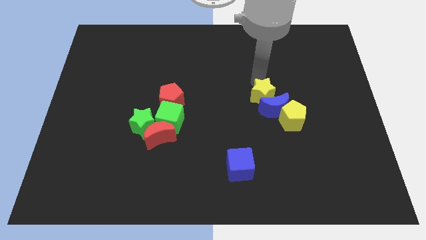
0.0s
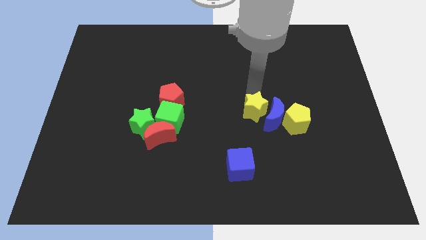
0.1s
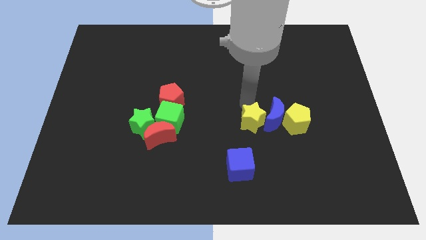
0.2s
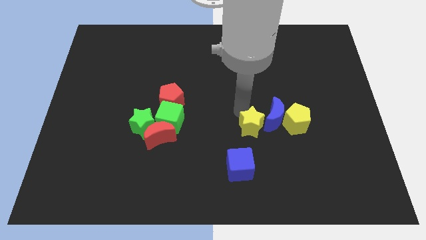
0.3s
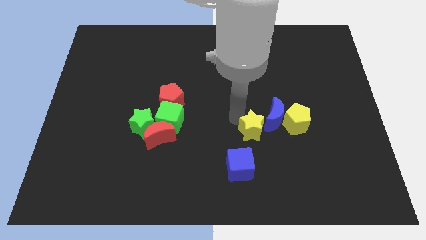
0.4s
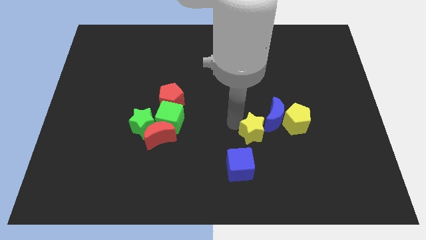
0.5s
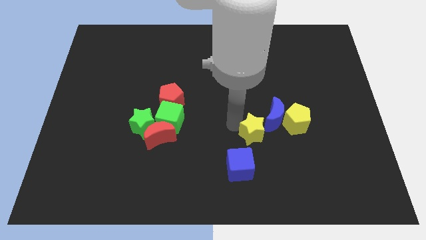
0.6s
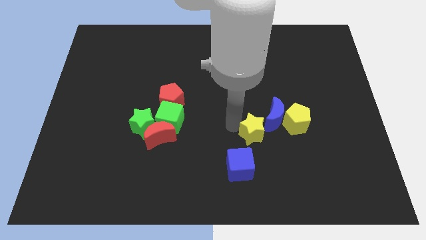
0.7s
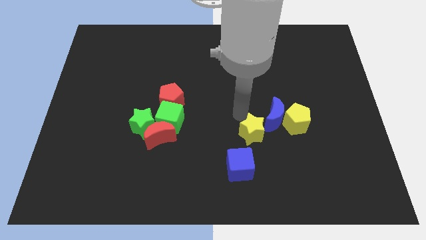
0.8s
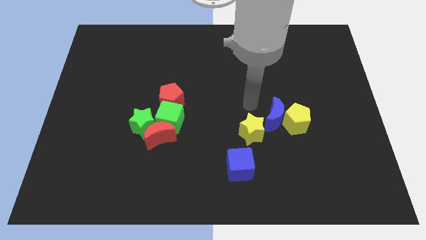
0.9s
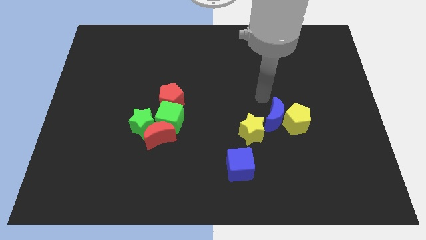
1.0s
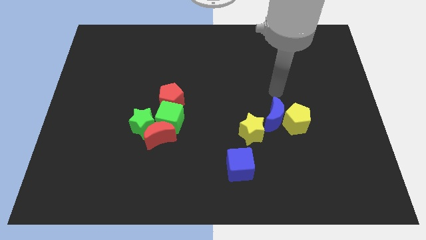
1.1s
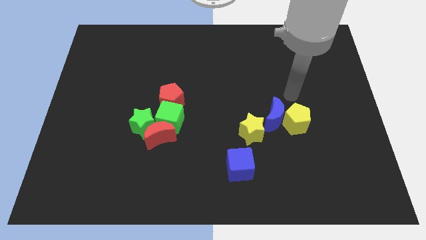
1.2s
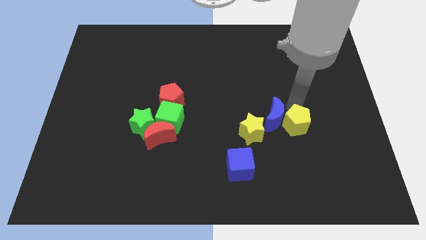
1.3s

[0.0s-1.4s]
separate yellow star from the blue moon

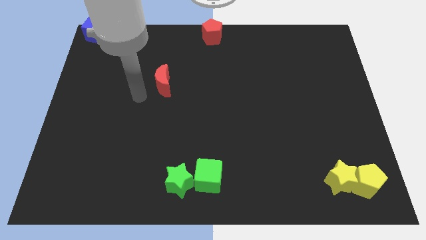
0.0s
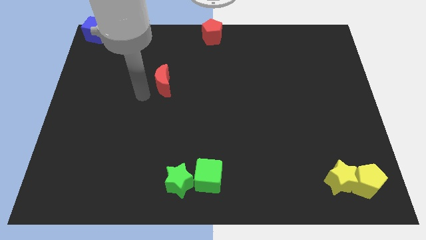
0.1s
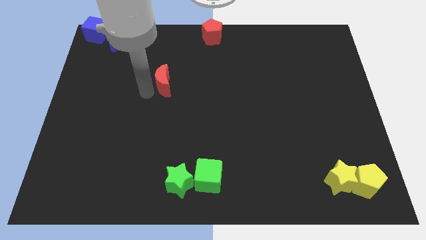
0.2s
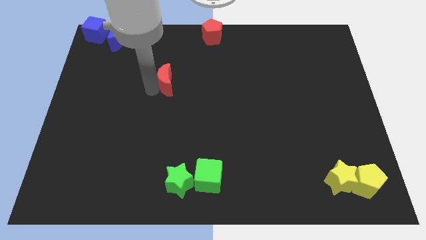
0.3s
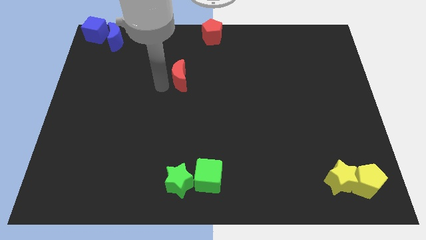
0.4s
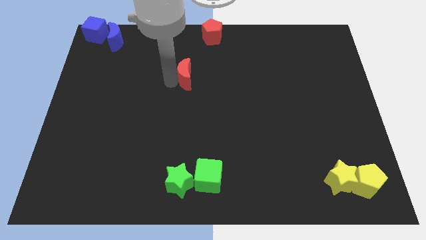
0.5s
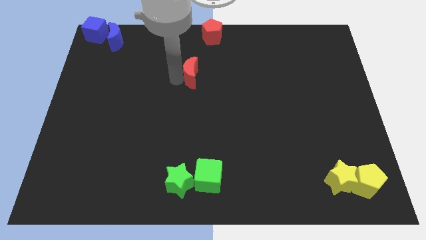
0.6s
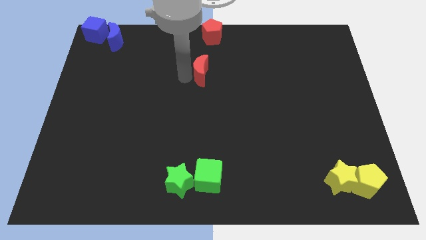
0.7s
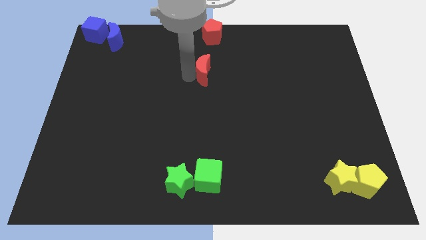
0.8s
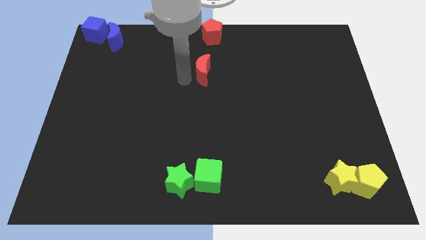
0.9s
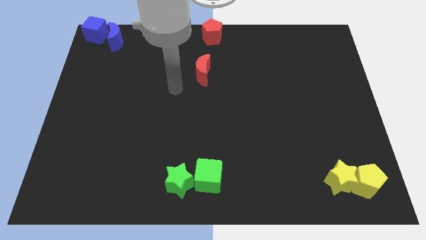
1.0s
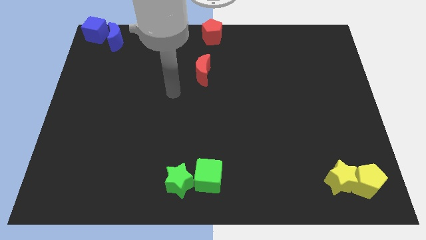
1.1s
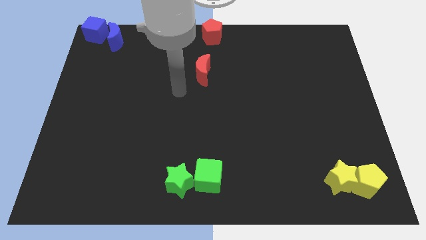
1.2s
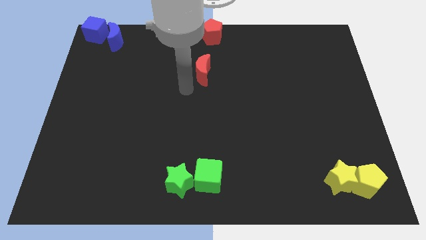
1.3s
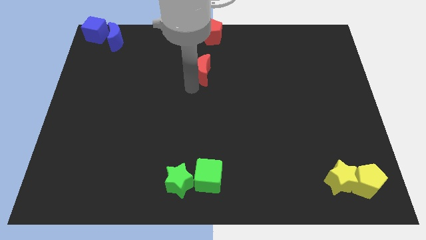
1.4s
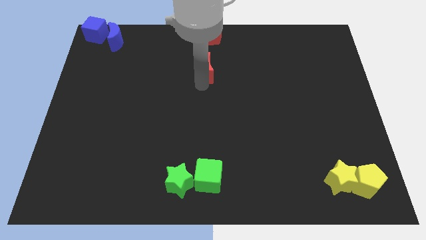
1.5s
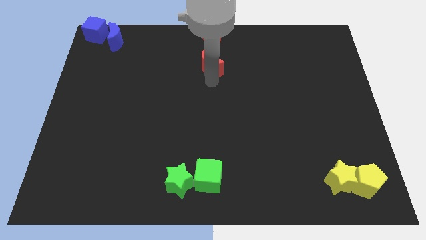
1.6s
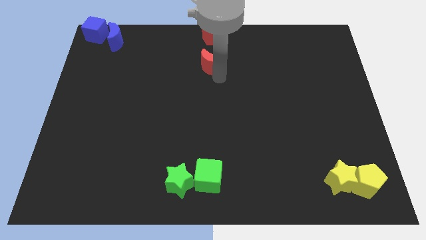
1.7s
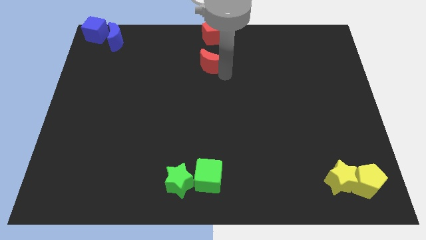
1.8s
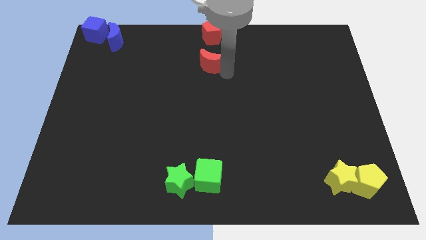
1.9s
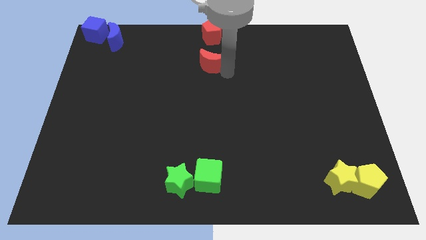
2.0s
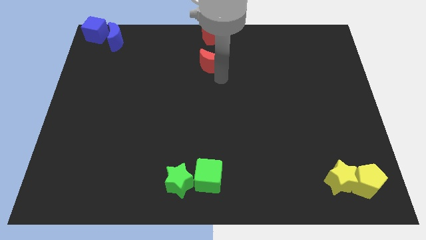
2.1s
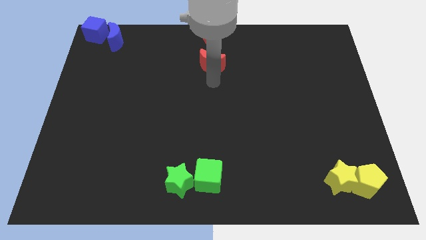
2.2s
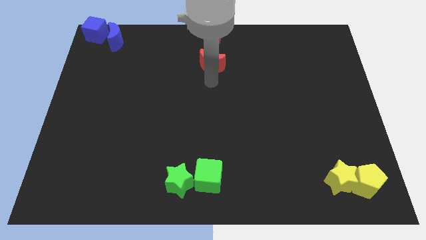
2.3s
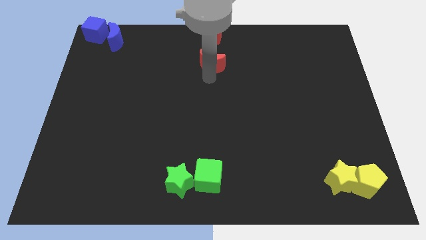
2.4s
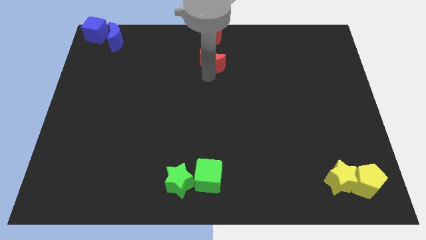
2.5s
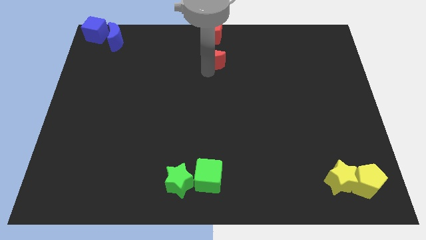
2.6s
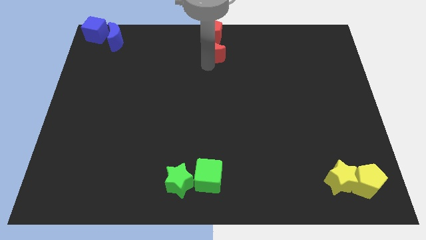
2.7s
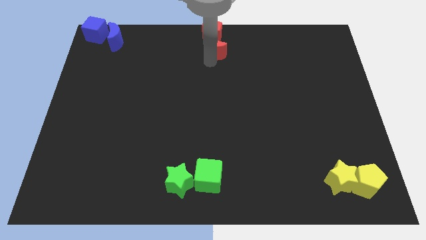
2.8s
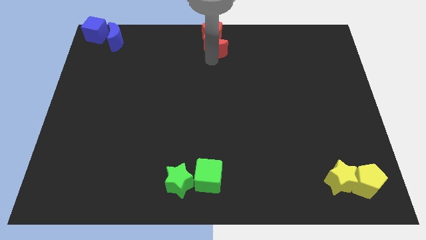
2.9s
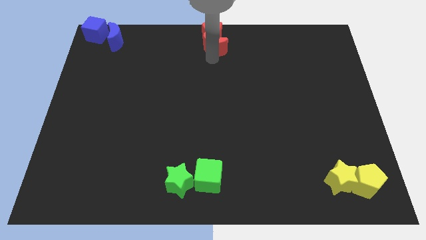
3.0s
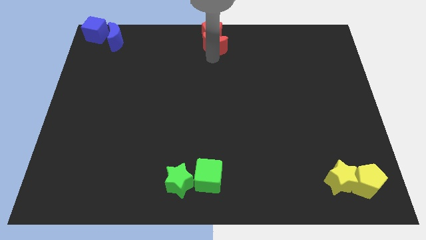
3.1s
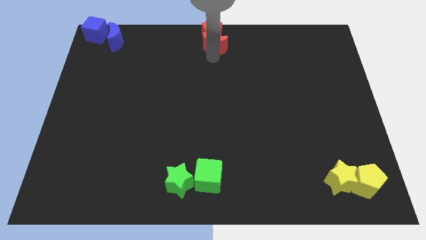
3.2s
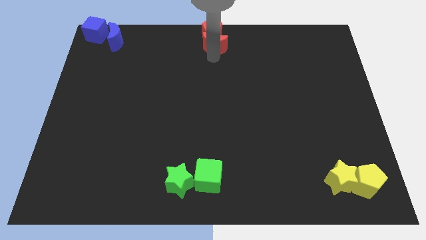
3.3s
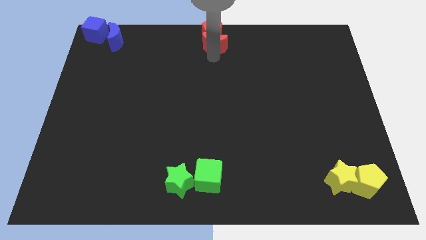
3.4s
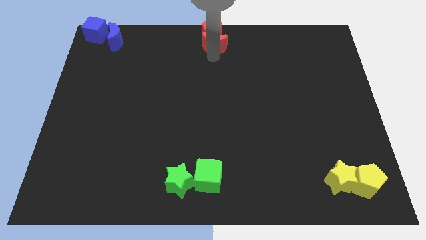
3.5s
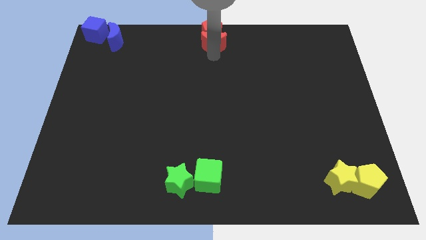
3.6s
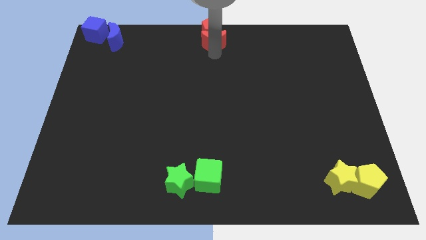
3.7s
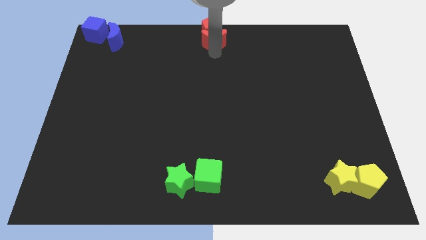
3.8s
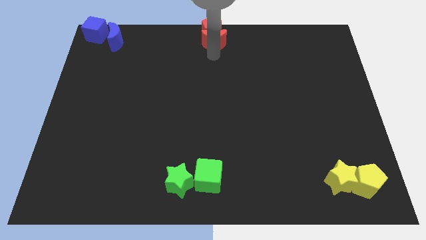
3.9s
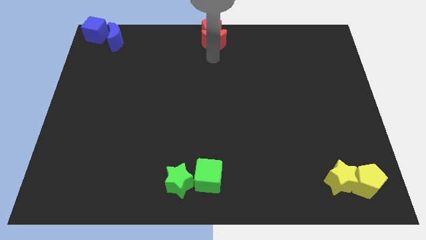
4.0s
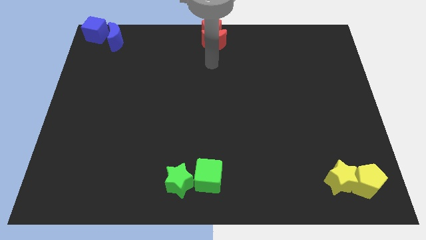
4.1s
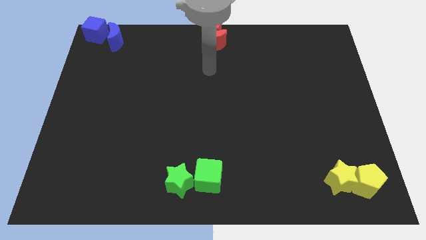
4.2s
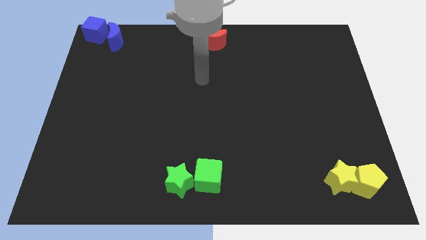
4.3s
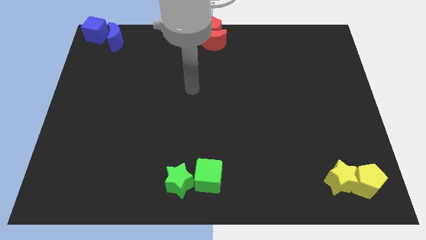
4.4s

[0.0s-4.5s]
move the red moon below the red pentagon

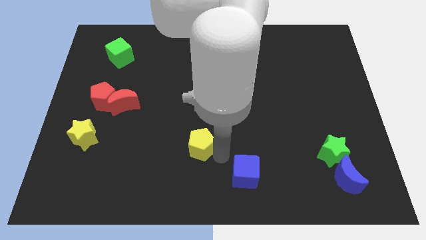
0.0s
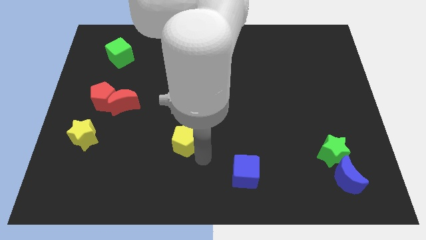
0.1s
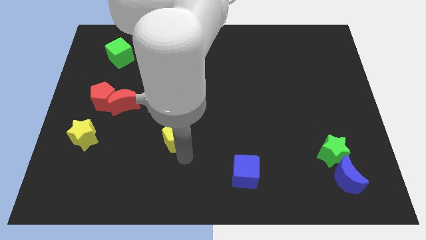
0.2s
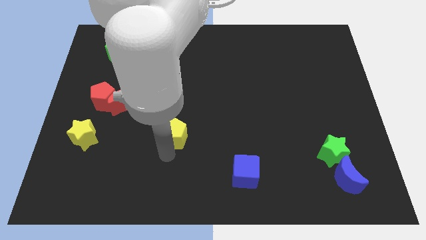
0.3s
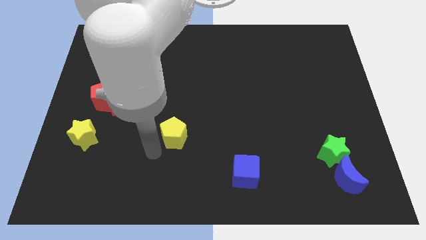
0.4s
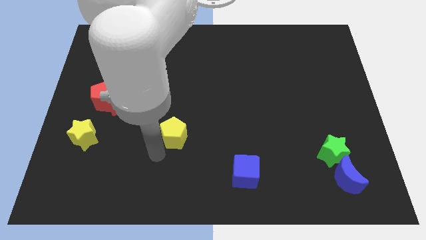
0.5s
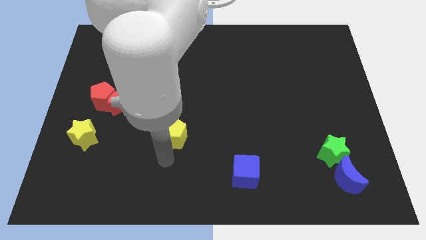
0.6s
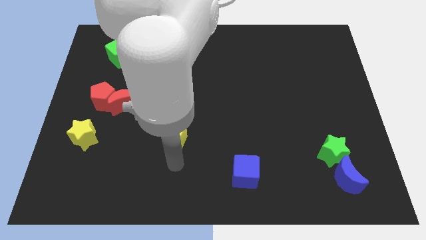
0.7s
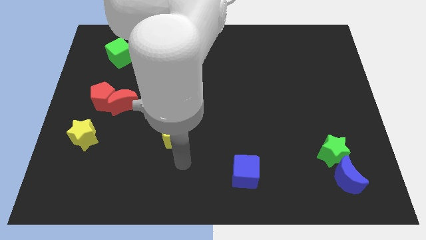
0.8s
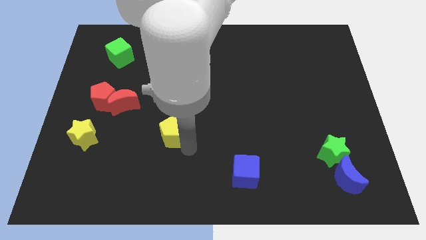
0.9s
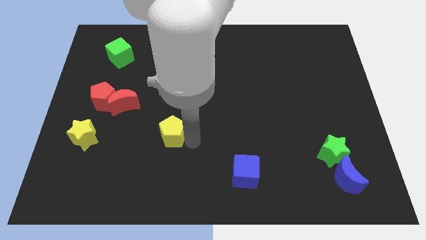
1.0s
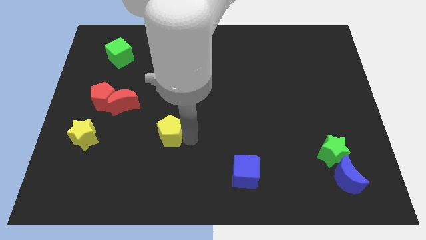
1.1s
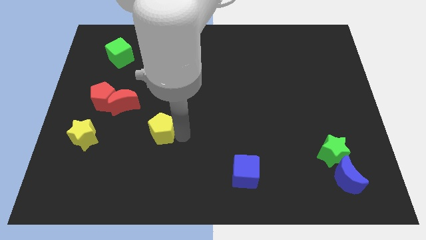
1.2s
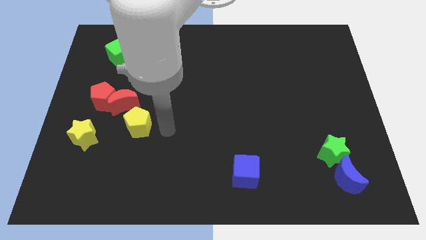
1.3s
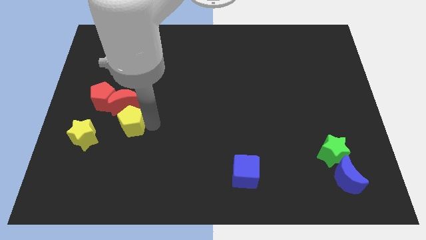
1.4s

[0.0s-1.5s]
place the yellow pentagon below the red moon

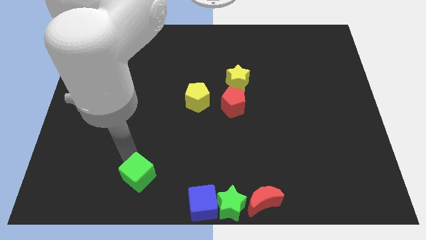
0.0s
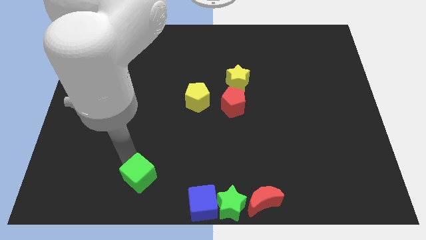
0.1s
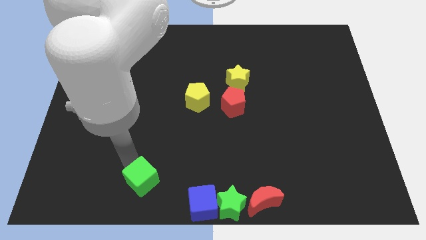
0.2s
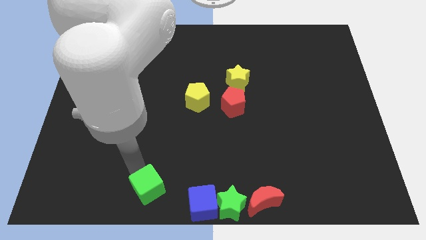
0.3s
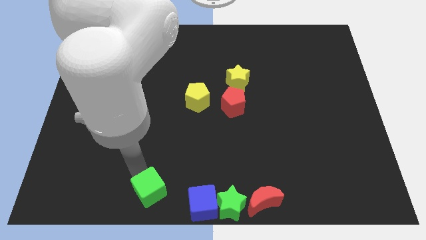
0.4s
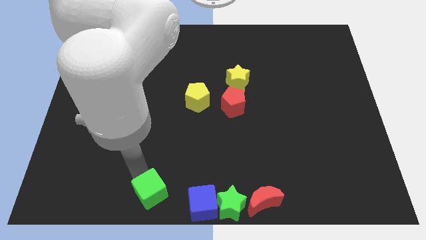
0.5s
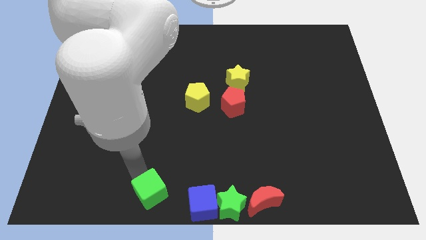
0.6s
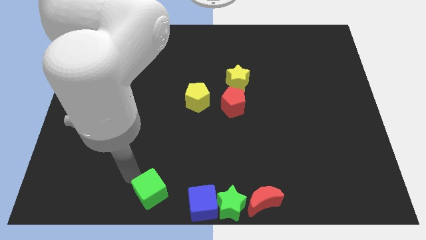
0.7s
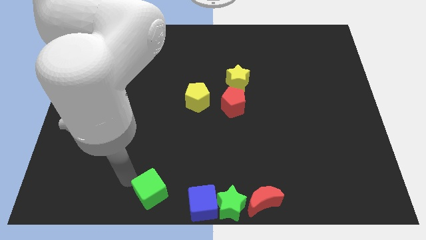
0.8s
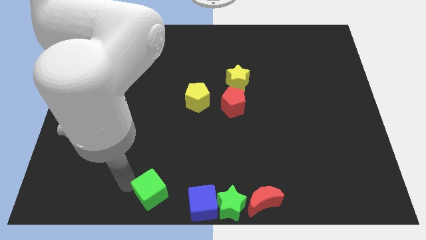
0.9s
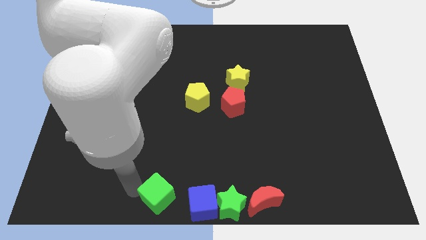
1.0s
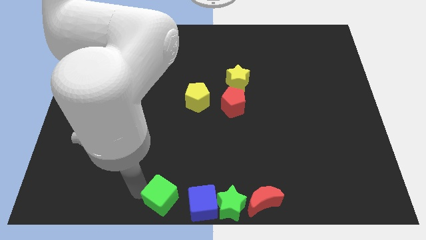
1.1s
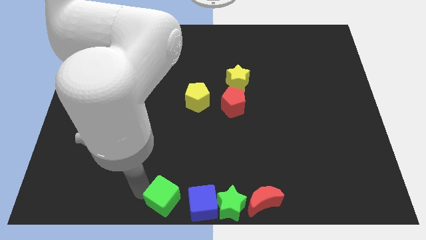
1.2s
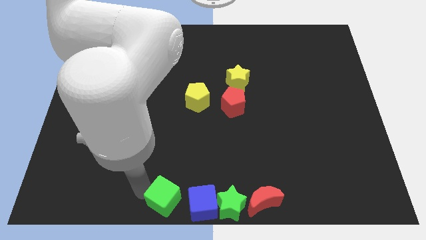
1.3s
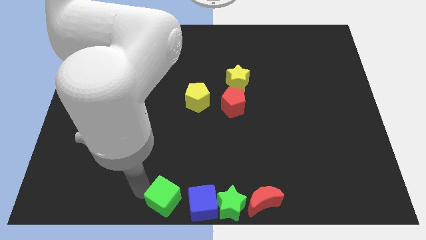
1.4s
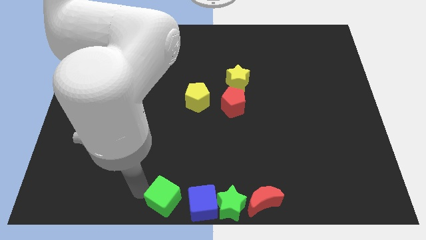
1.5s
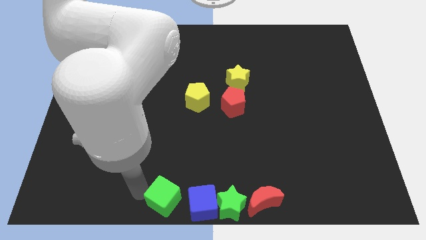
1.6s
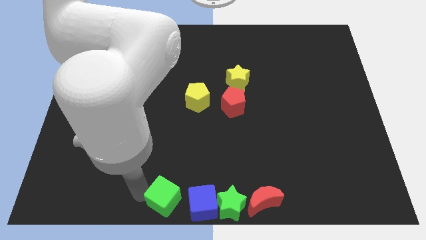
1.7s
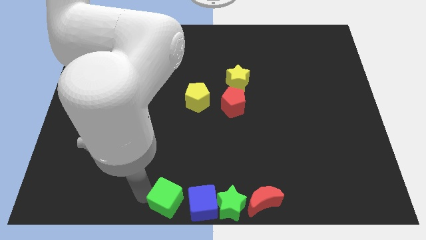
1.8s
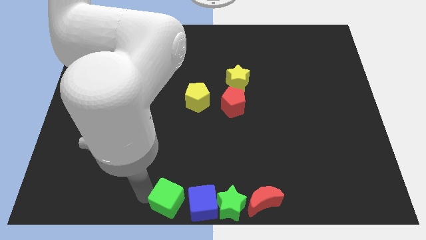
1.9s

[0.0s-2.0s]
slide the green cube towards the blue cube
